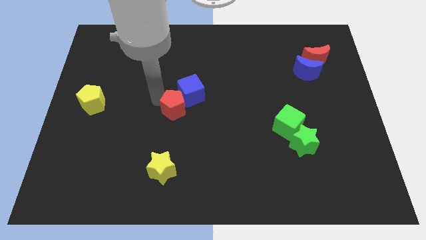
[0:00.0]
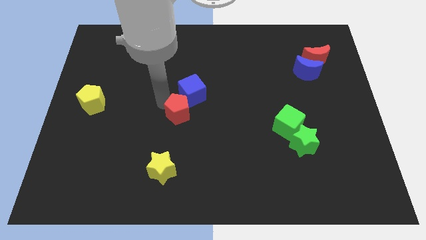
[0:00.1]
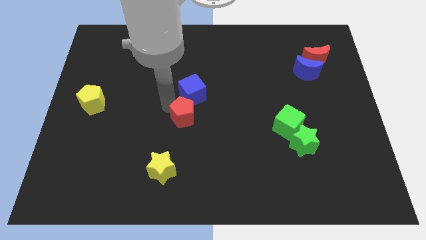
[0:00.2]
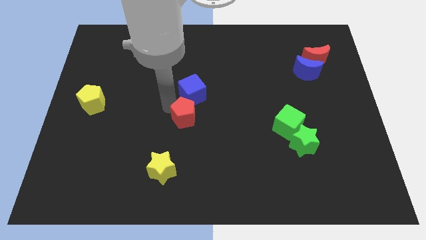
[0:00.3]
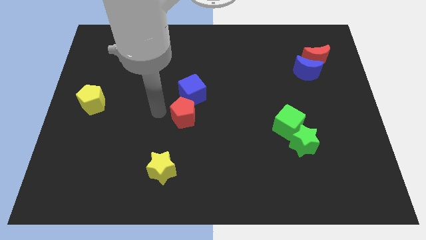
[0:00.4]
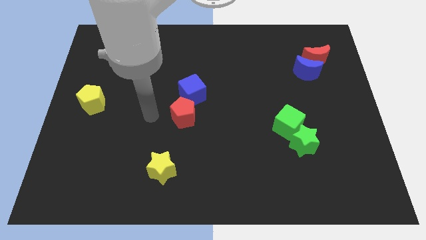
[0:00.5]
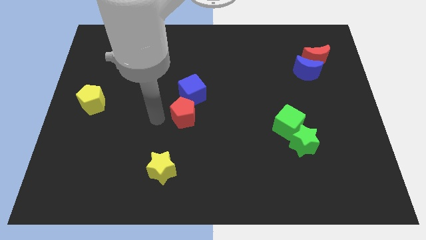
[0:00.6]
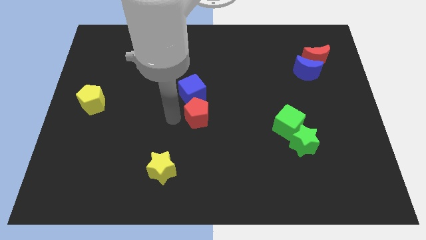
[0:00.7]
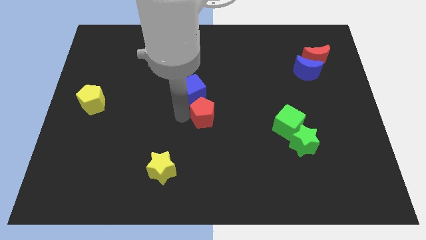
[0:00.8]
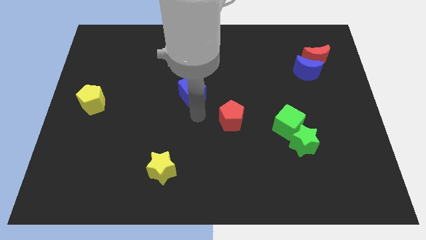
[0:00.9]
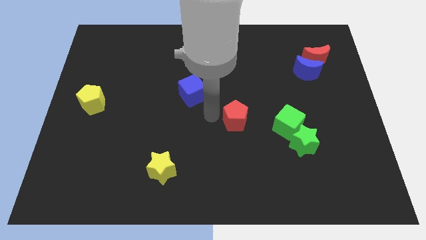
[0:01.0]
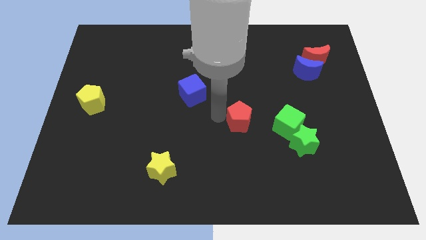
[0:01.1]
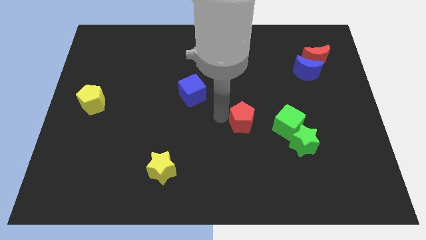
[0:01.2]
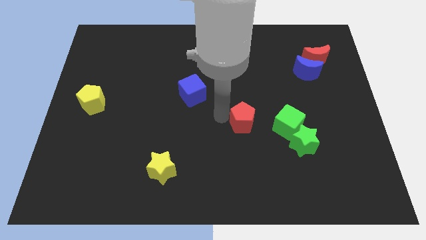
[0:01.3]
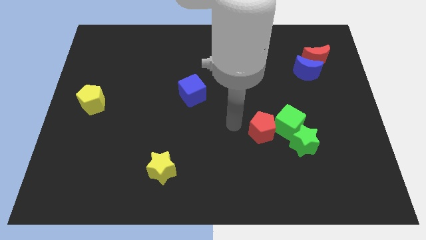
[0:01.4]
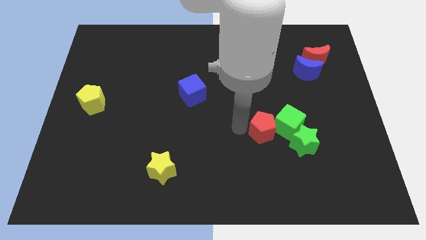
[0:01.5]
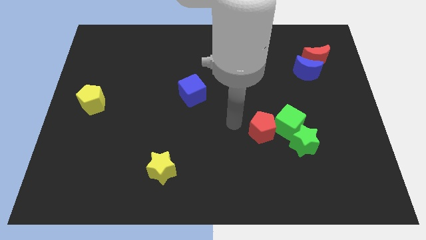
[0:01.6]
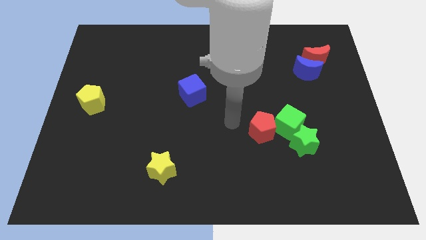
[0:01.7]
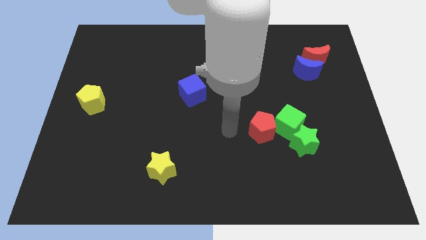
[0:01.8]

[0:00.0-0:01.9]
slide the red pentagon into the green cube

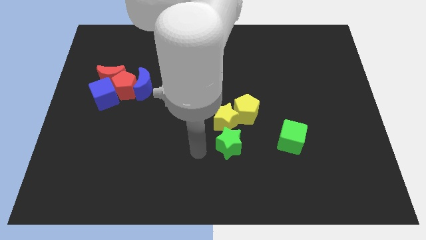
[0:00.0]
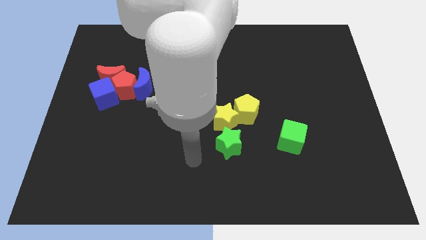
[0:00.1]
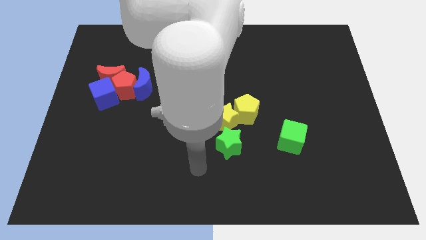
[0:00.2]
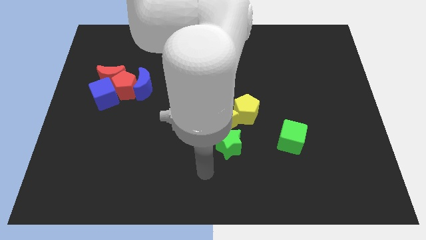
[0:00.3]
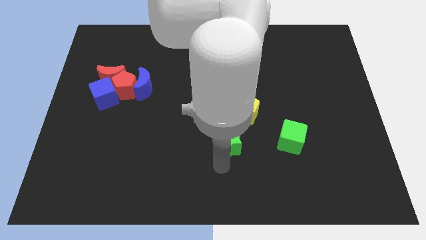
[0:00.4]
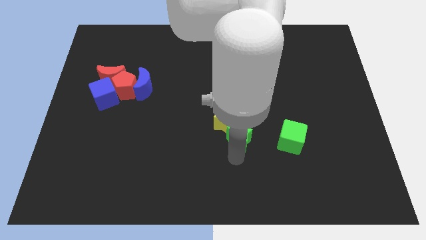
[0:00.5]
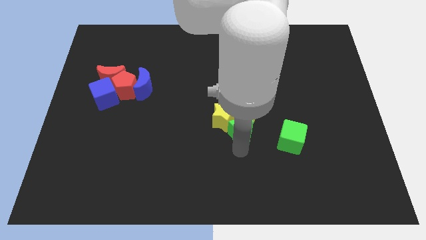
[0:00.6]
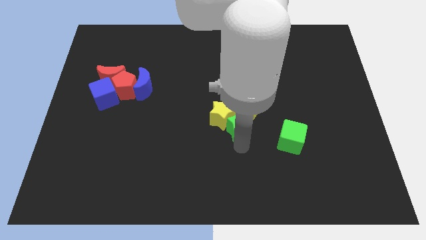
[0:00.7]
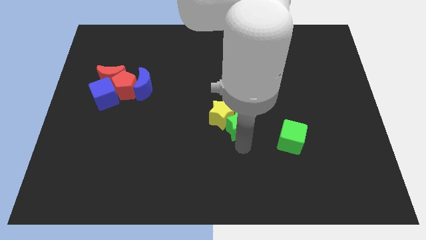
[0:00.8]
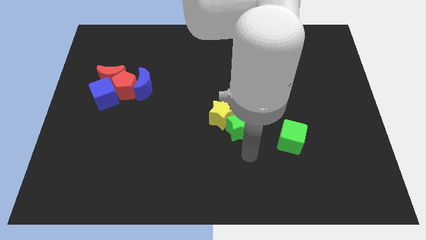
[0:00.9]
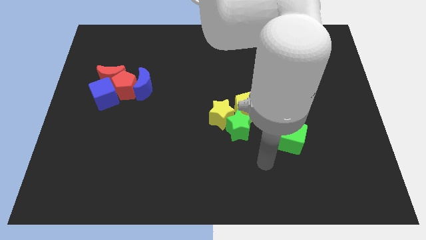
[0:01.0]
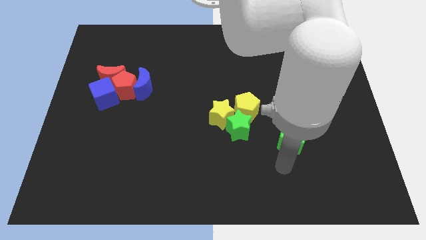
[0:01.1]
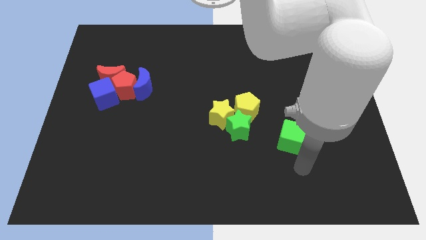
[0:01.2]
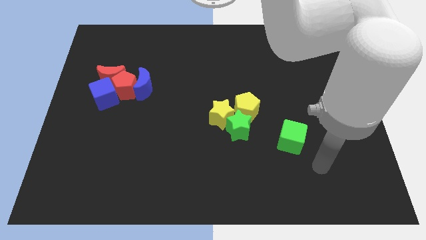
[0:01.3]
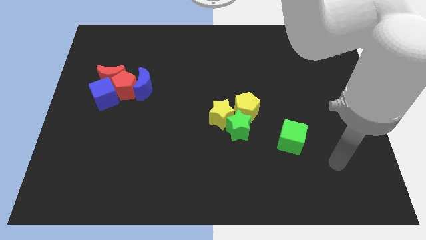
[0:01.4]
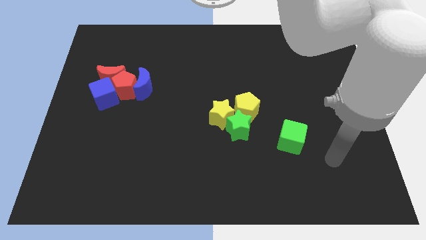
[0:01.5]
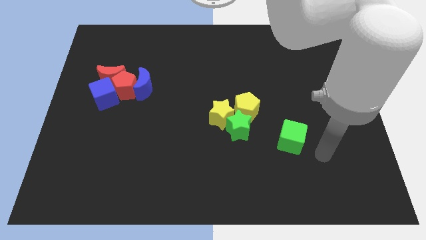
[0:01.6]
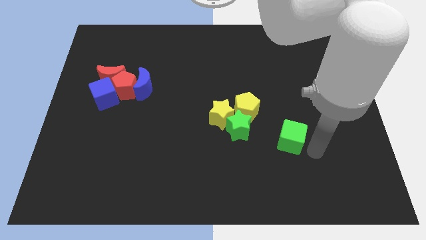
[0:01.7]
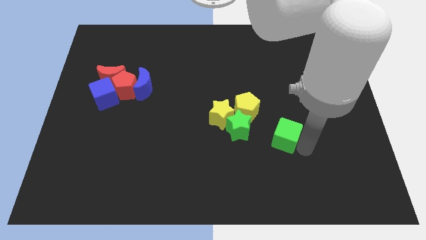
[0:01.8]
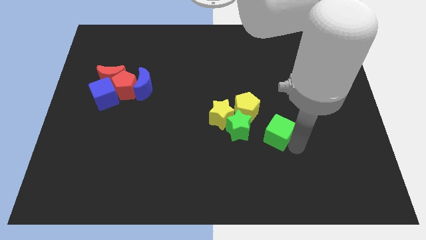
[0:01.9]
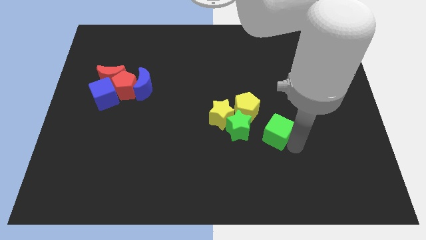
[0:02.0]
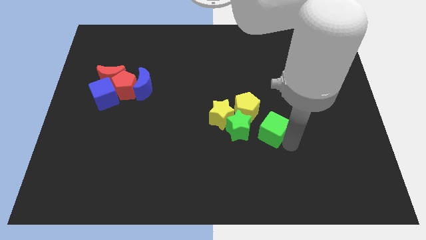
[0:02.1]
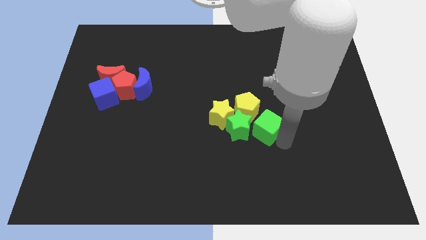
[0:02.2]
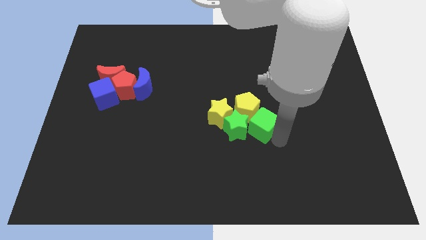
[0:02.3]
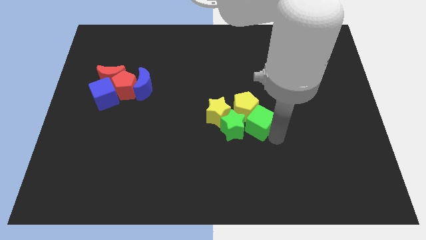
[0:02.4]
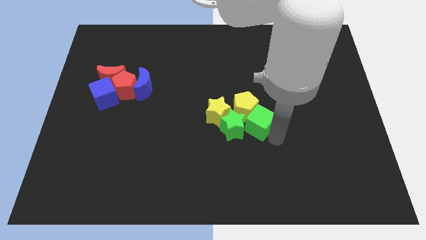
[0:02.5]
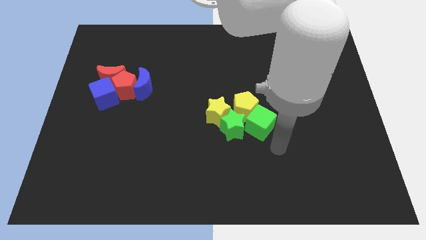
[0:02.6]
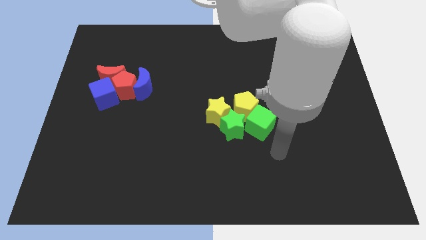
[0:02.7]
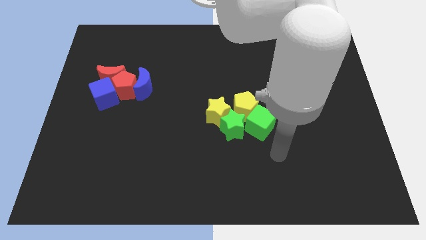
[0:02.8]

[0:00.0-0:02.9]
push green cube towards yellow pentagon

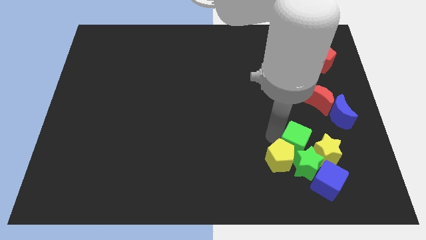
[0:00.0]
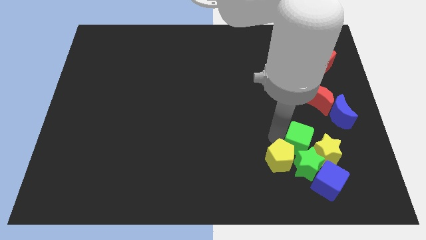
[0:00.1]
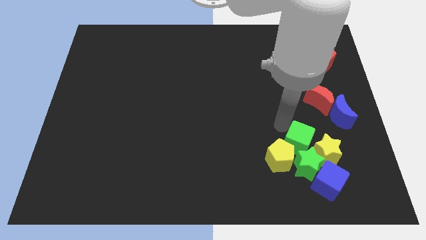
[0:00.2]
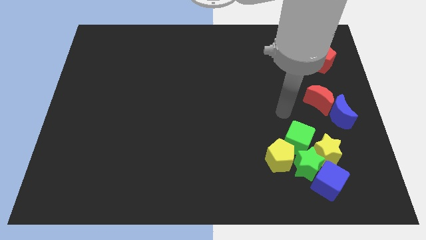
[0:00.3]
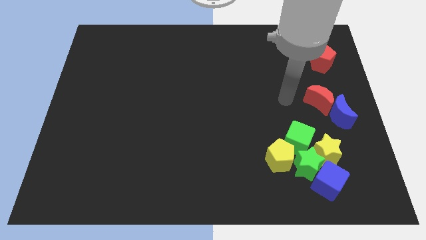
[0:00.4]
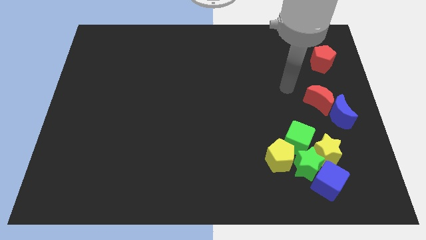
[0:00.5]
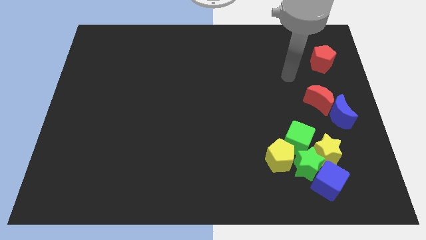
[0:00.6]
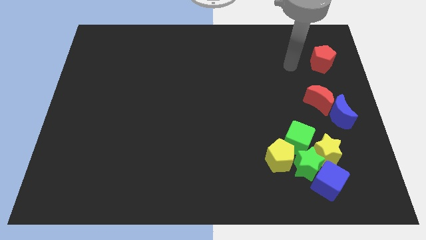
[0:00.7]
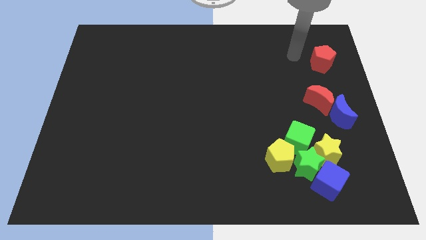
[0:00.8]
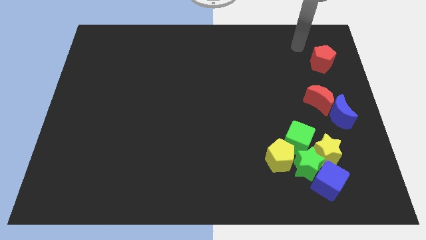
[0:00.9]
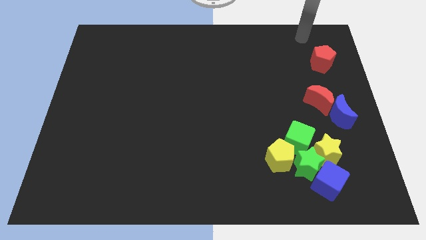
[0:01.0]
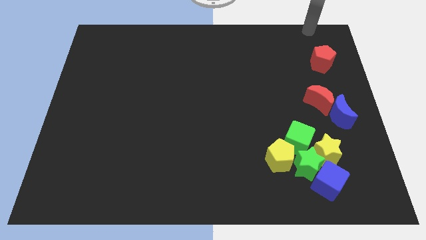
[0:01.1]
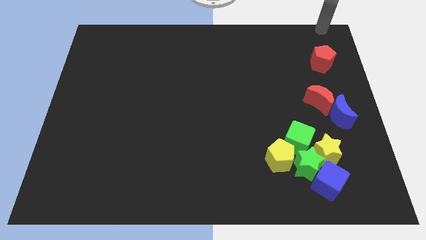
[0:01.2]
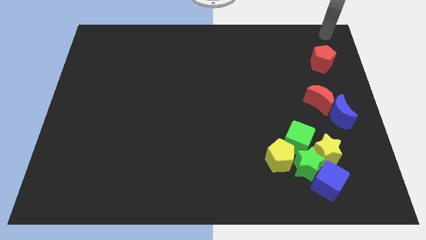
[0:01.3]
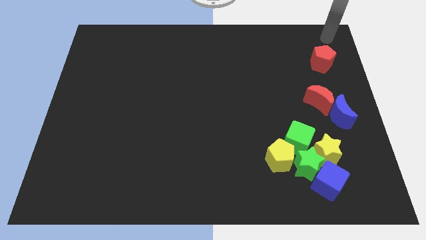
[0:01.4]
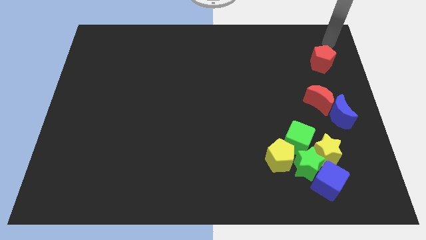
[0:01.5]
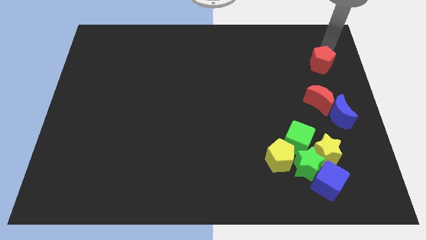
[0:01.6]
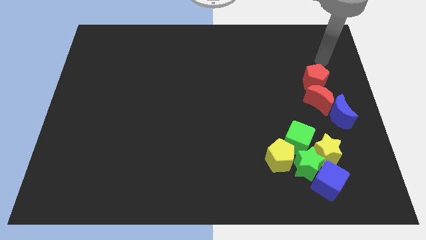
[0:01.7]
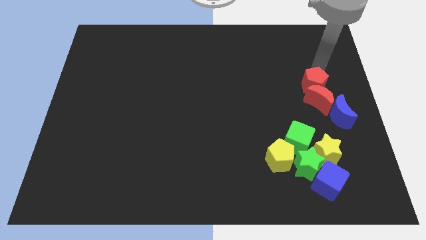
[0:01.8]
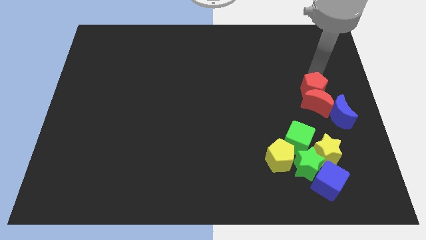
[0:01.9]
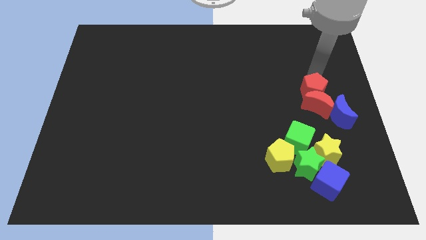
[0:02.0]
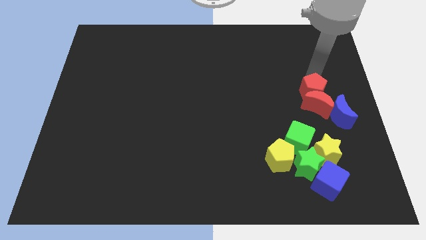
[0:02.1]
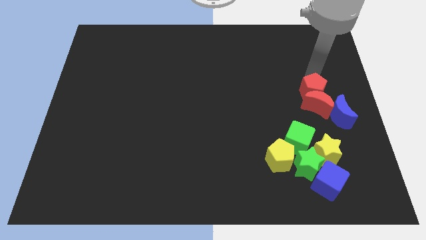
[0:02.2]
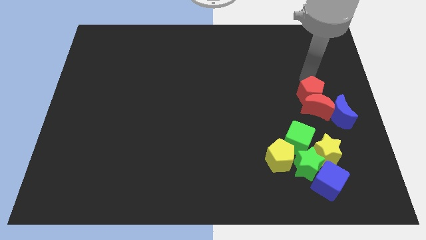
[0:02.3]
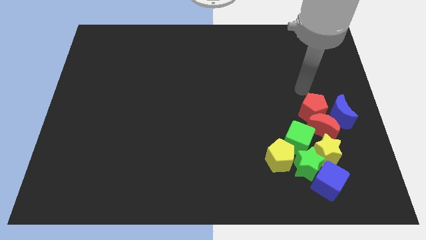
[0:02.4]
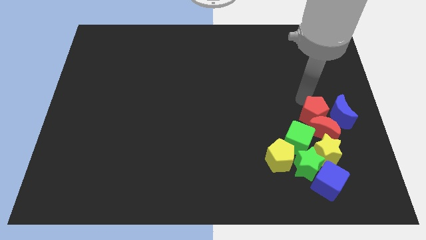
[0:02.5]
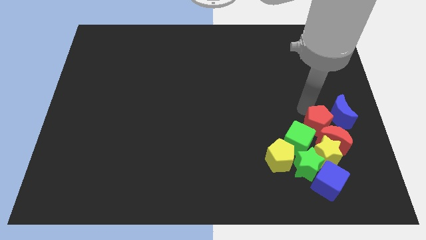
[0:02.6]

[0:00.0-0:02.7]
move the red pentagon and red moon together with the group of blocks

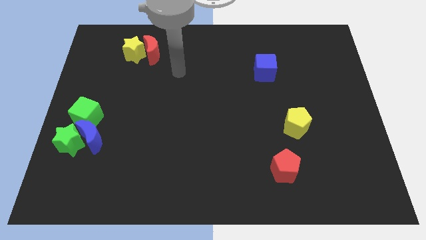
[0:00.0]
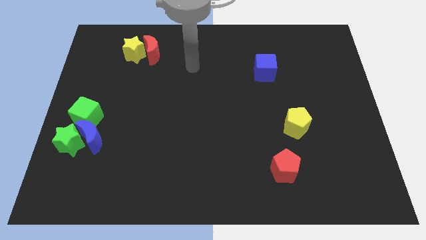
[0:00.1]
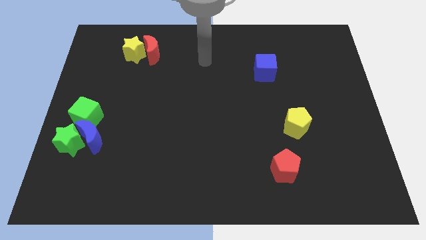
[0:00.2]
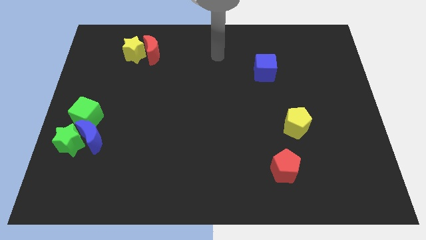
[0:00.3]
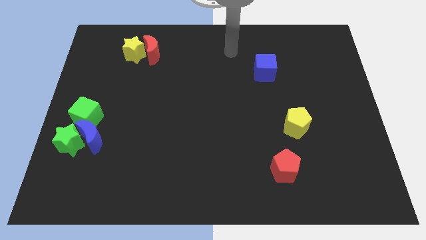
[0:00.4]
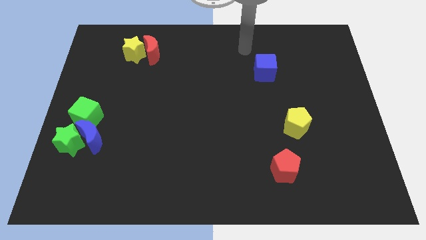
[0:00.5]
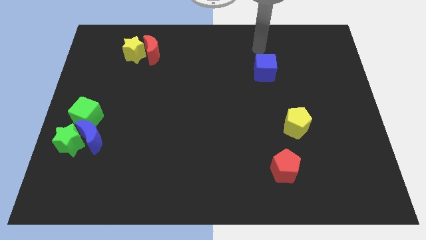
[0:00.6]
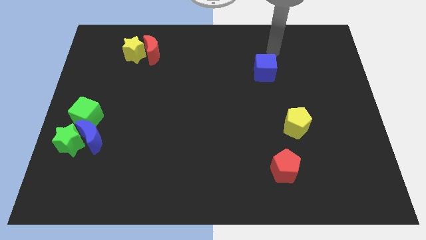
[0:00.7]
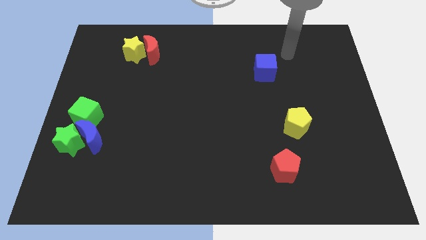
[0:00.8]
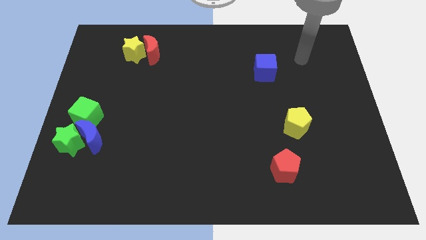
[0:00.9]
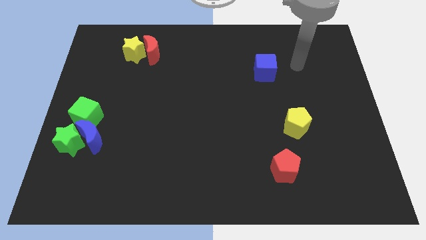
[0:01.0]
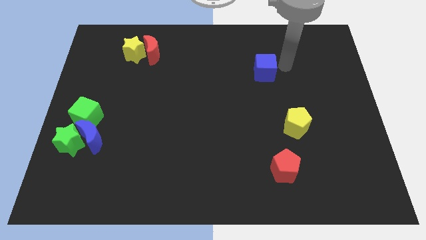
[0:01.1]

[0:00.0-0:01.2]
point your arm at the right side of the blue cube

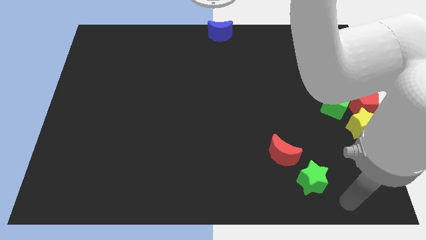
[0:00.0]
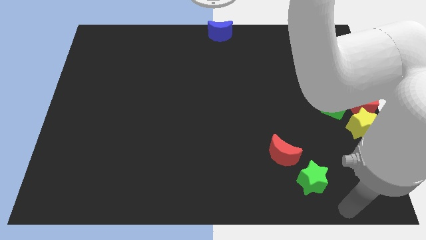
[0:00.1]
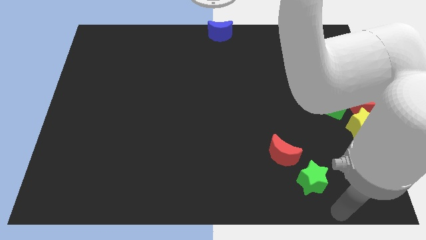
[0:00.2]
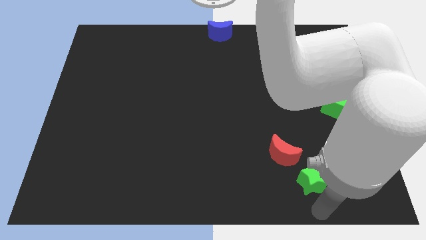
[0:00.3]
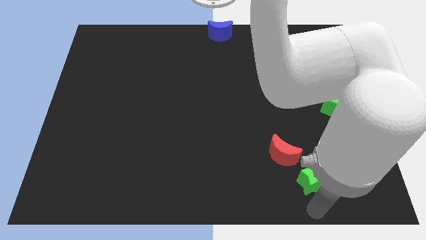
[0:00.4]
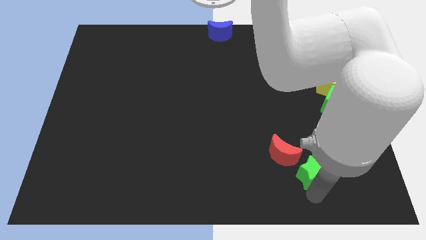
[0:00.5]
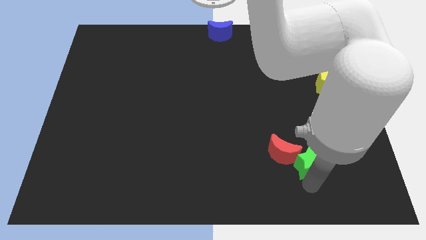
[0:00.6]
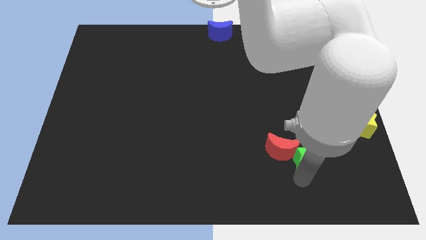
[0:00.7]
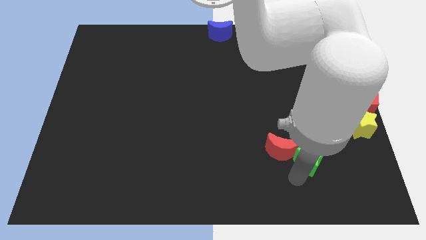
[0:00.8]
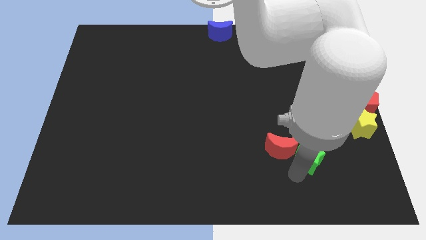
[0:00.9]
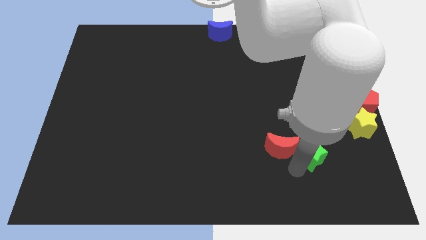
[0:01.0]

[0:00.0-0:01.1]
push green start towards red crescent
